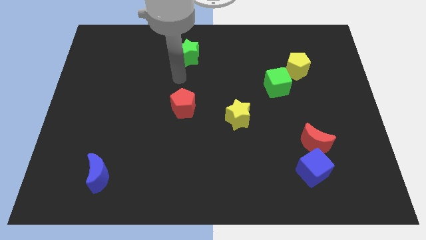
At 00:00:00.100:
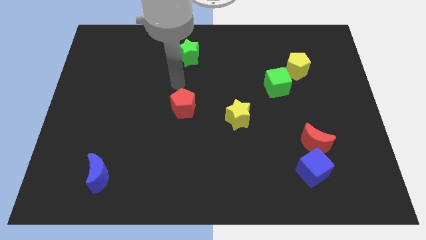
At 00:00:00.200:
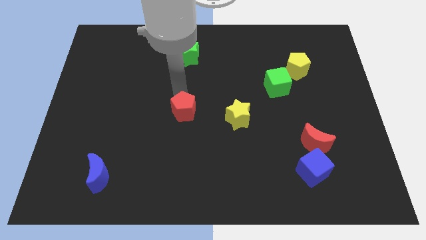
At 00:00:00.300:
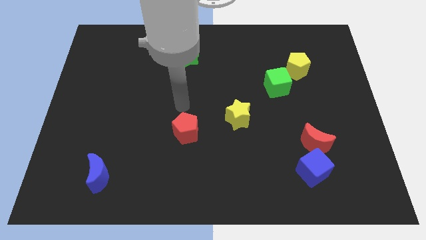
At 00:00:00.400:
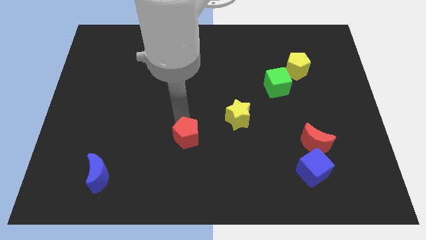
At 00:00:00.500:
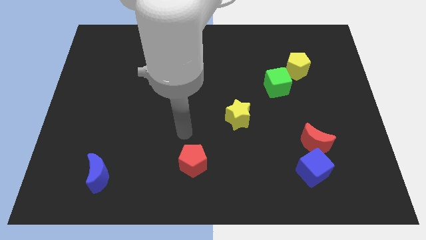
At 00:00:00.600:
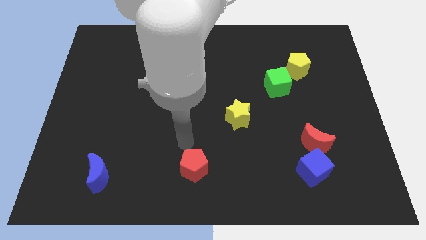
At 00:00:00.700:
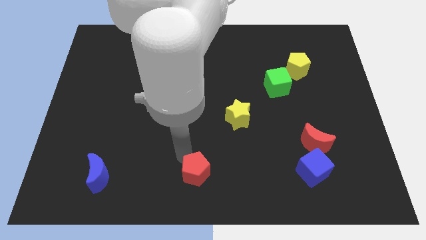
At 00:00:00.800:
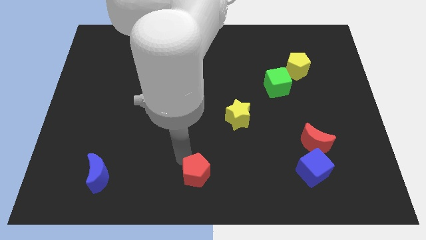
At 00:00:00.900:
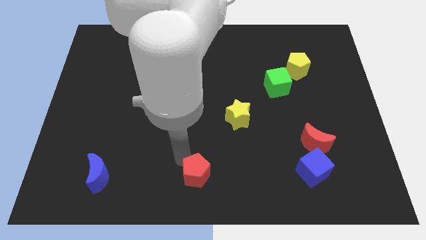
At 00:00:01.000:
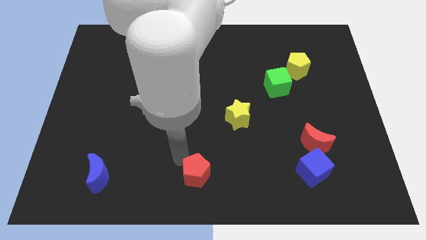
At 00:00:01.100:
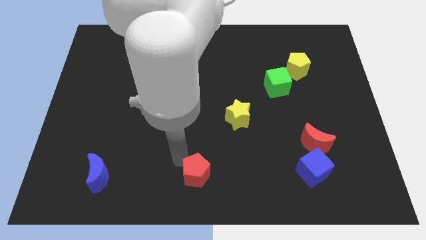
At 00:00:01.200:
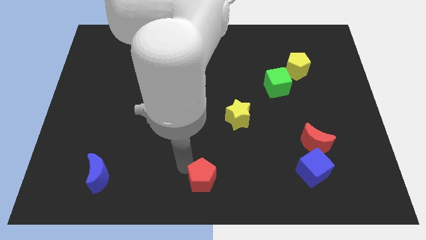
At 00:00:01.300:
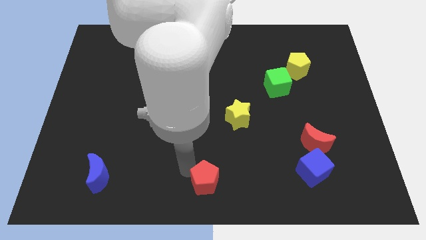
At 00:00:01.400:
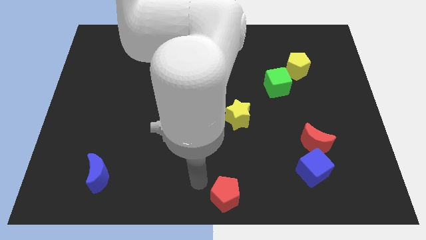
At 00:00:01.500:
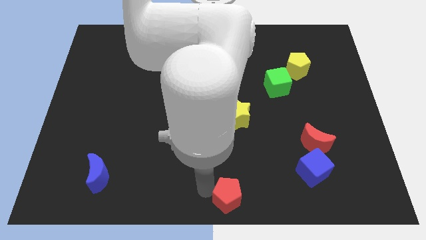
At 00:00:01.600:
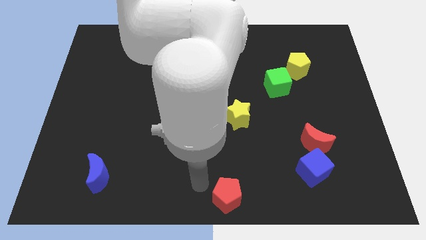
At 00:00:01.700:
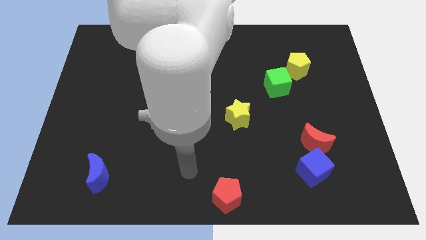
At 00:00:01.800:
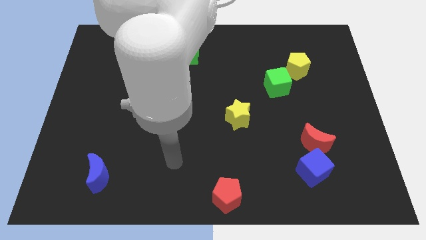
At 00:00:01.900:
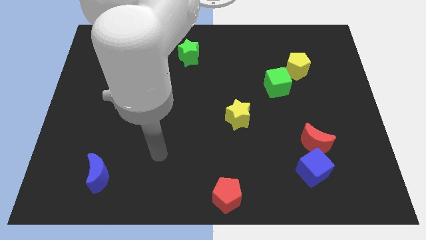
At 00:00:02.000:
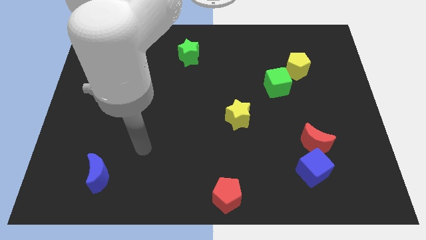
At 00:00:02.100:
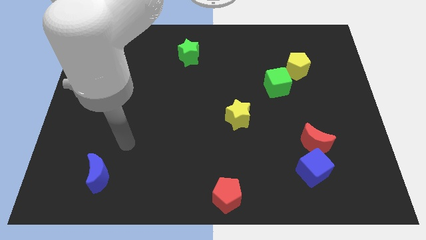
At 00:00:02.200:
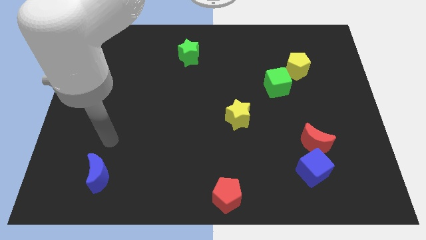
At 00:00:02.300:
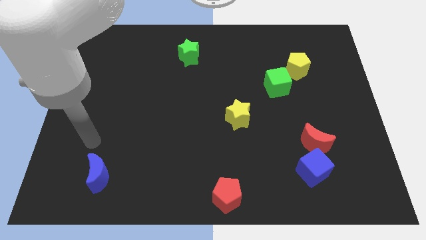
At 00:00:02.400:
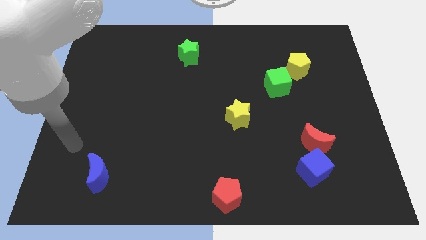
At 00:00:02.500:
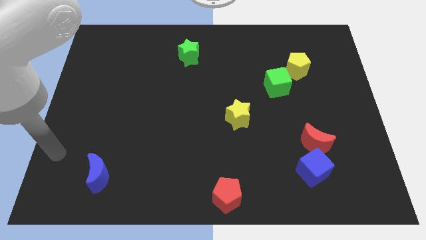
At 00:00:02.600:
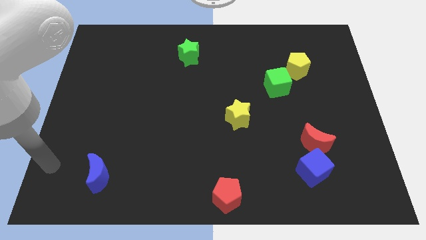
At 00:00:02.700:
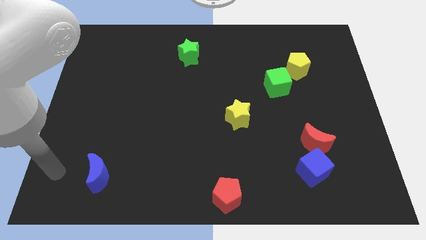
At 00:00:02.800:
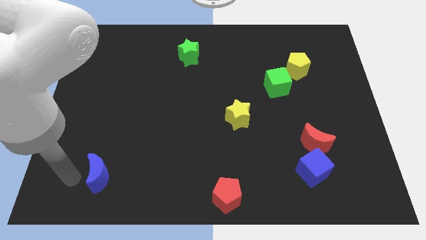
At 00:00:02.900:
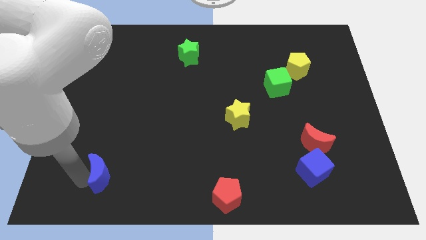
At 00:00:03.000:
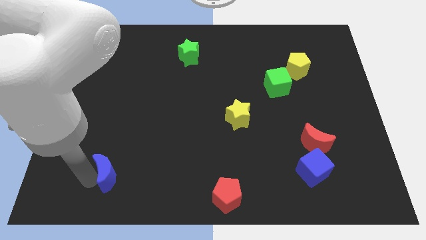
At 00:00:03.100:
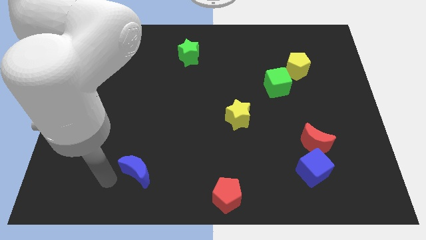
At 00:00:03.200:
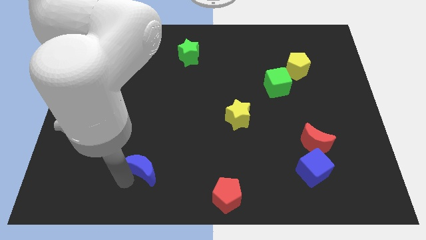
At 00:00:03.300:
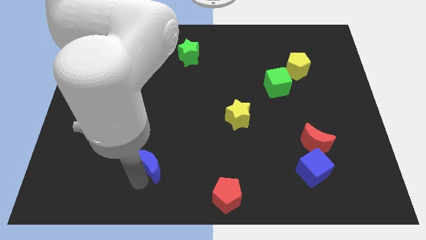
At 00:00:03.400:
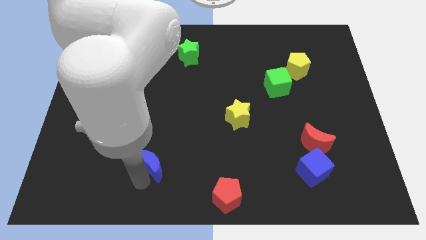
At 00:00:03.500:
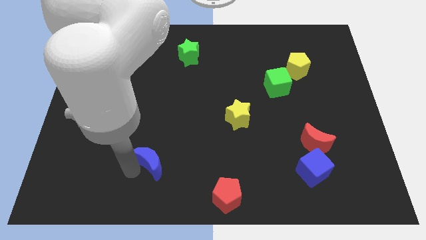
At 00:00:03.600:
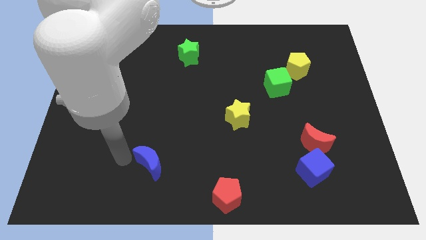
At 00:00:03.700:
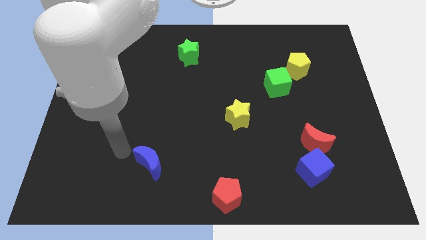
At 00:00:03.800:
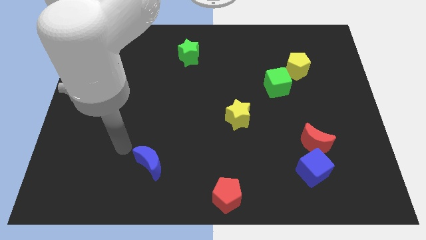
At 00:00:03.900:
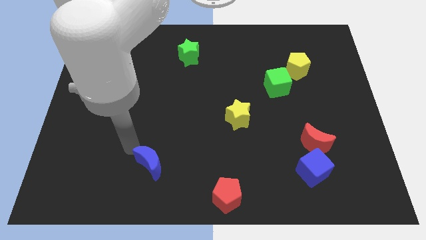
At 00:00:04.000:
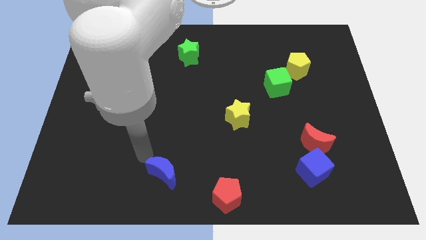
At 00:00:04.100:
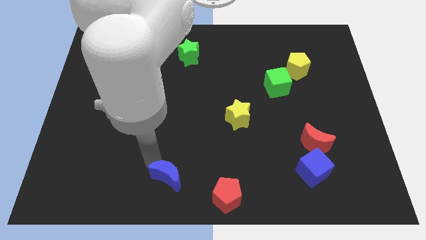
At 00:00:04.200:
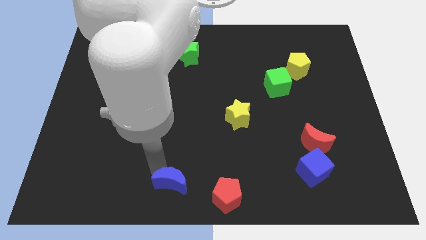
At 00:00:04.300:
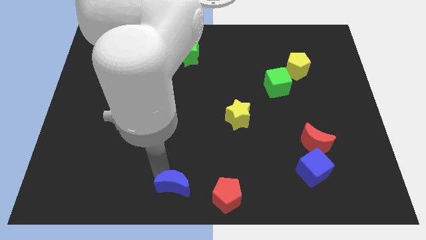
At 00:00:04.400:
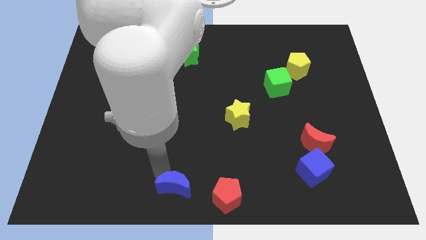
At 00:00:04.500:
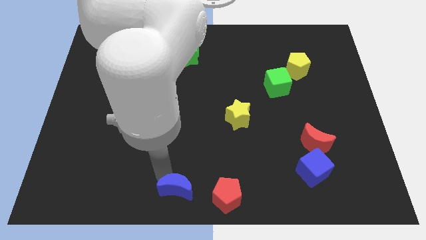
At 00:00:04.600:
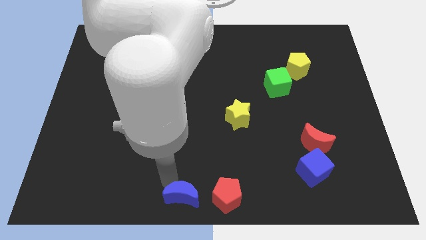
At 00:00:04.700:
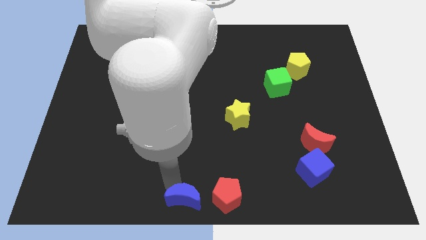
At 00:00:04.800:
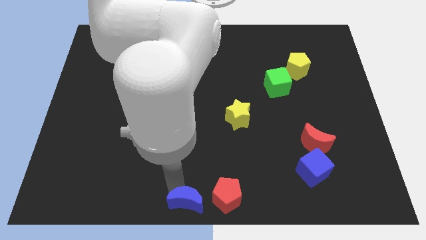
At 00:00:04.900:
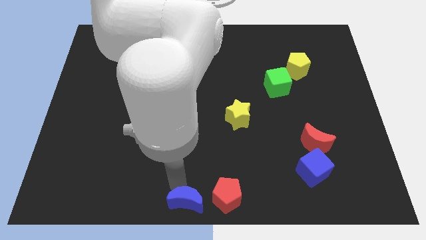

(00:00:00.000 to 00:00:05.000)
place the blue moon at the bottom center of the board

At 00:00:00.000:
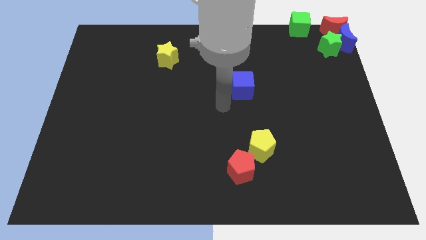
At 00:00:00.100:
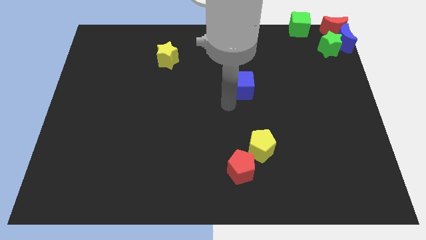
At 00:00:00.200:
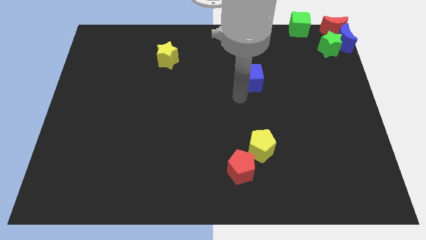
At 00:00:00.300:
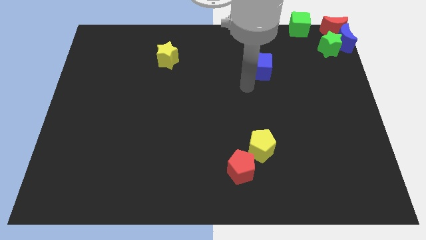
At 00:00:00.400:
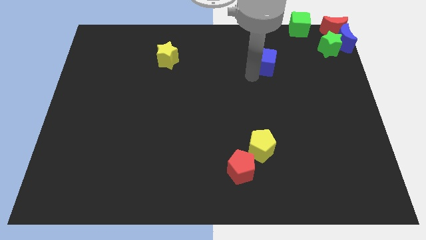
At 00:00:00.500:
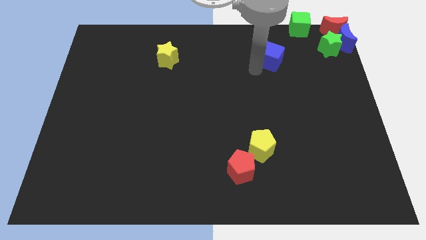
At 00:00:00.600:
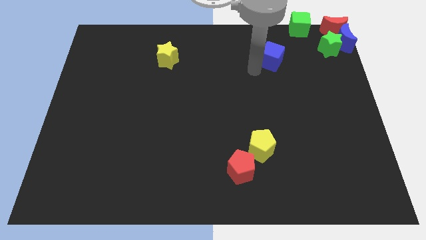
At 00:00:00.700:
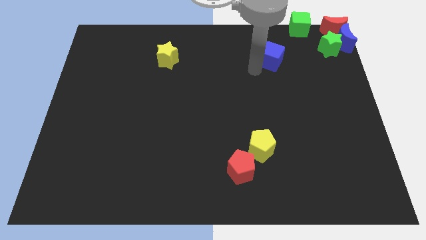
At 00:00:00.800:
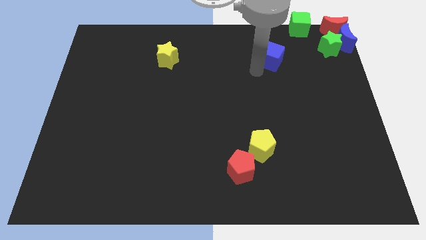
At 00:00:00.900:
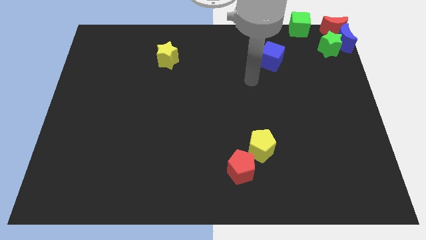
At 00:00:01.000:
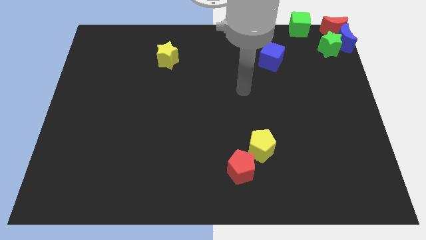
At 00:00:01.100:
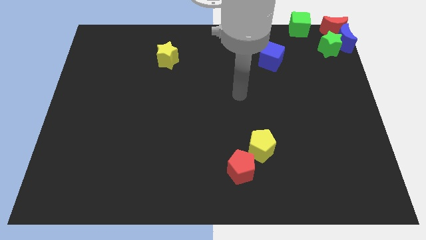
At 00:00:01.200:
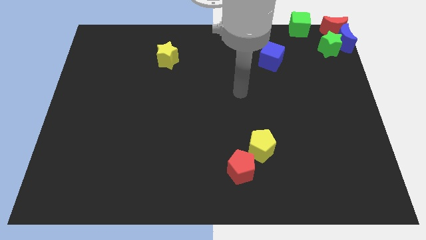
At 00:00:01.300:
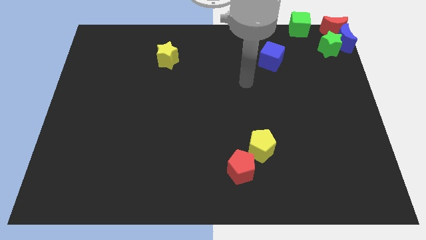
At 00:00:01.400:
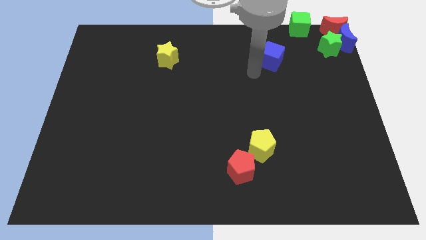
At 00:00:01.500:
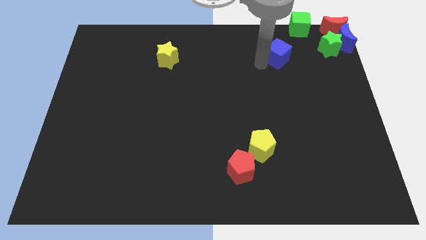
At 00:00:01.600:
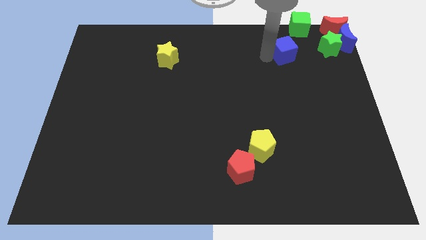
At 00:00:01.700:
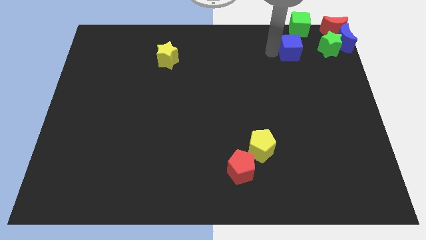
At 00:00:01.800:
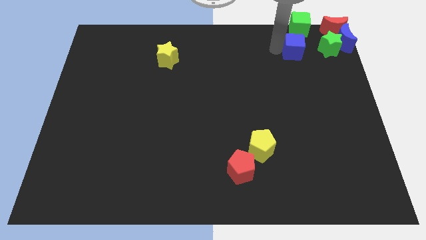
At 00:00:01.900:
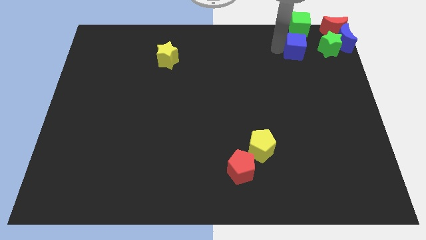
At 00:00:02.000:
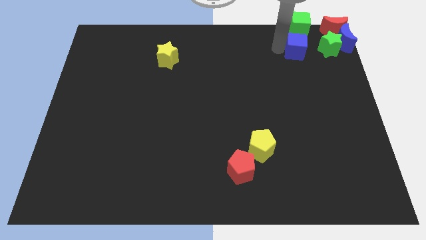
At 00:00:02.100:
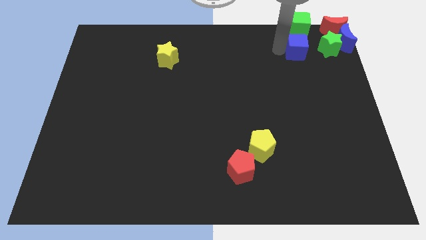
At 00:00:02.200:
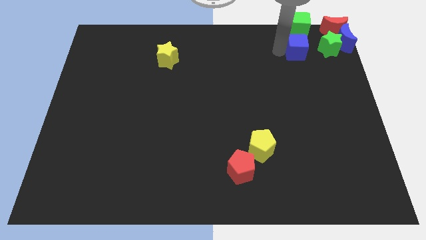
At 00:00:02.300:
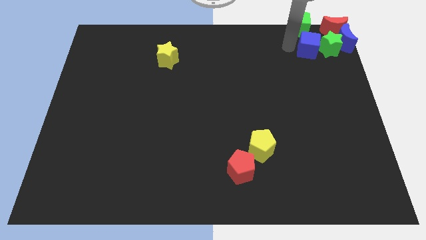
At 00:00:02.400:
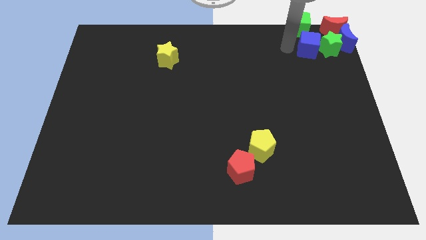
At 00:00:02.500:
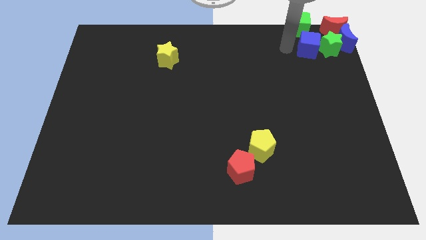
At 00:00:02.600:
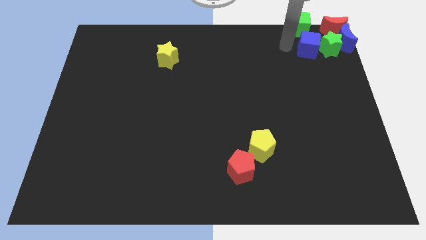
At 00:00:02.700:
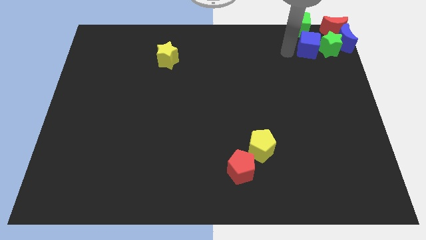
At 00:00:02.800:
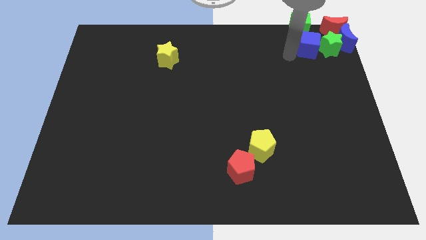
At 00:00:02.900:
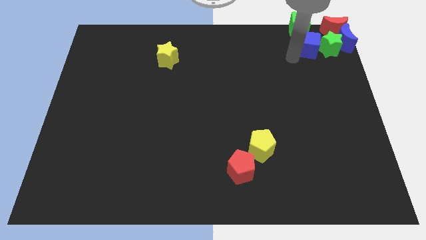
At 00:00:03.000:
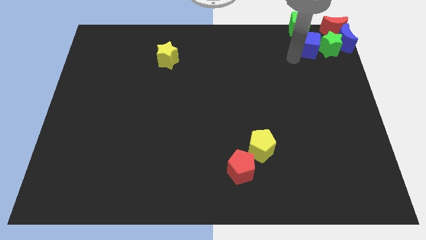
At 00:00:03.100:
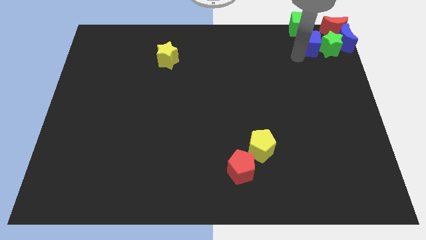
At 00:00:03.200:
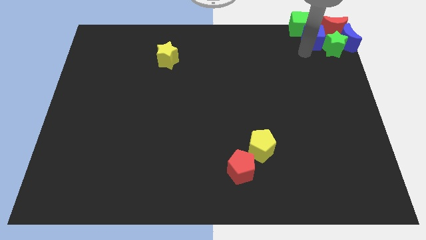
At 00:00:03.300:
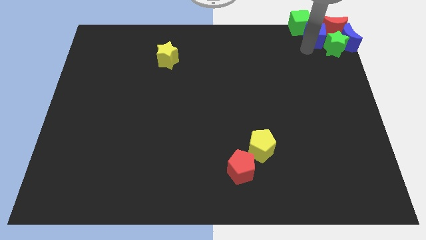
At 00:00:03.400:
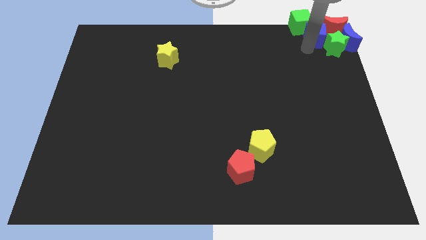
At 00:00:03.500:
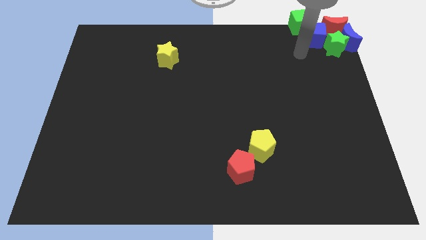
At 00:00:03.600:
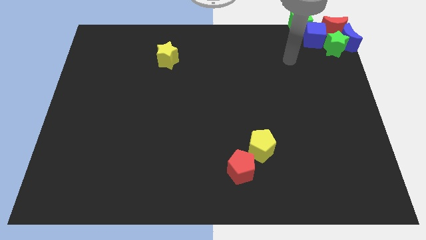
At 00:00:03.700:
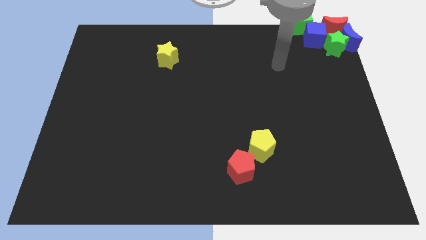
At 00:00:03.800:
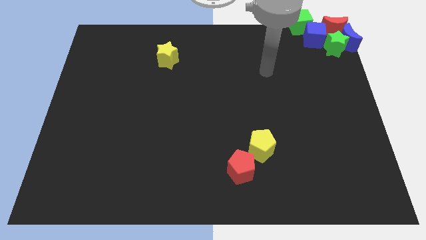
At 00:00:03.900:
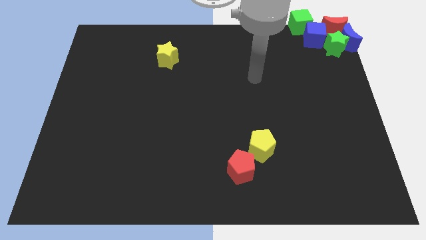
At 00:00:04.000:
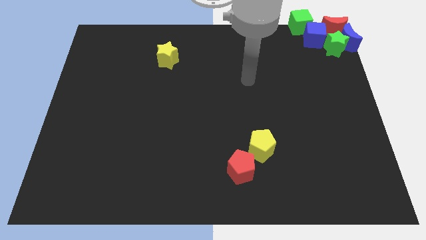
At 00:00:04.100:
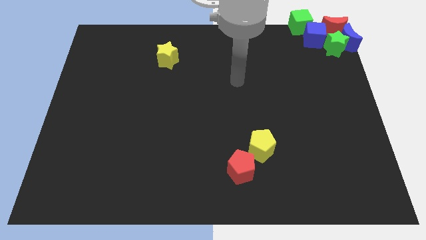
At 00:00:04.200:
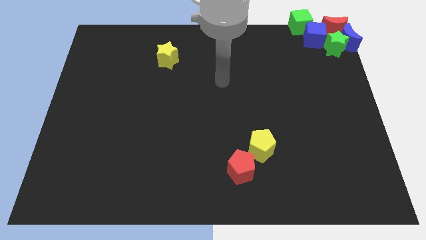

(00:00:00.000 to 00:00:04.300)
move blue cube into the other blocks
